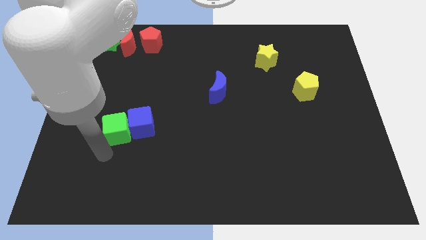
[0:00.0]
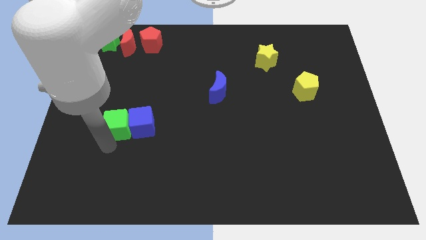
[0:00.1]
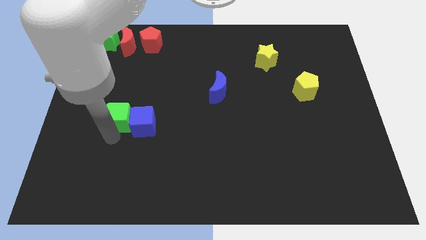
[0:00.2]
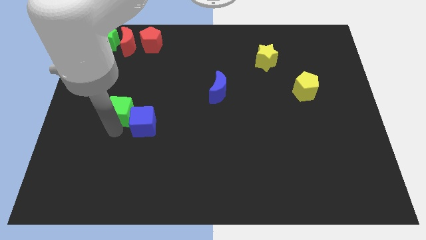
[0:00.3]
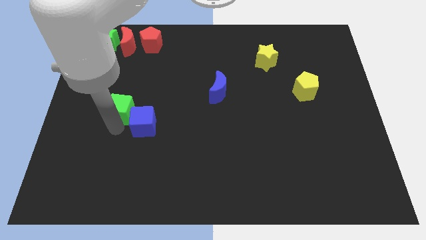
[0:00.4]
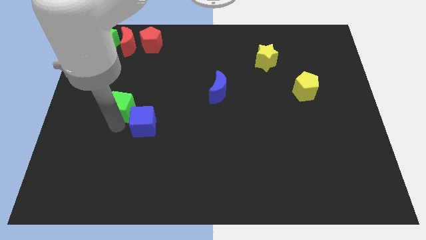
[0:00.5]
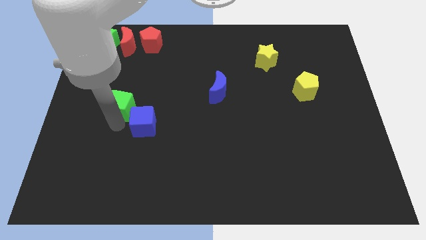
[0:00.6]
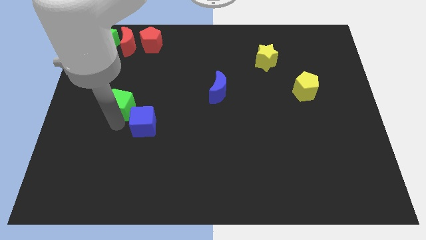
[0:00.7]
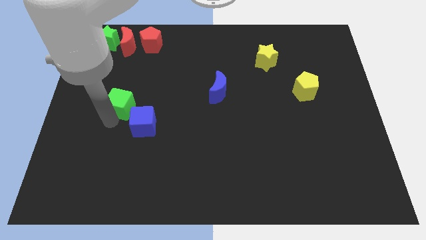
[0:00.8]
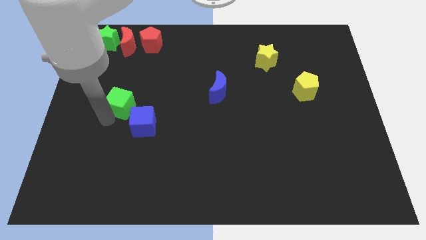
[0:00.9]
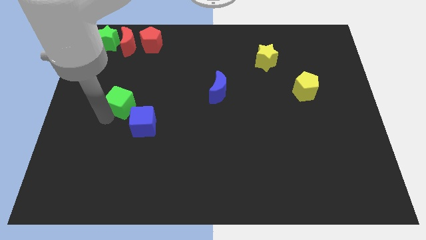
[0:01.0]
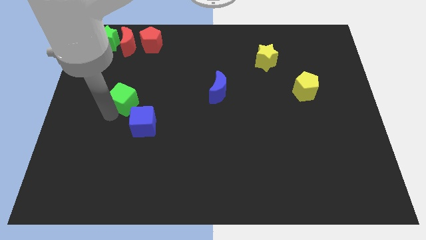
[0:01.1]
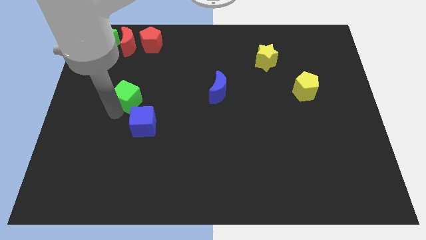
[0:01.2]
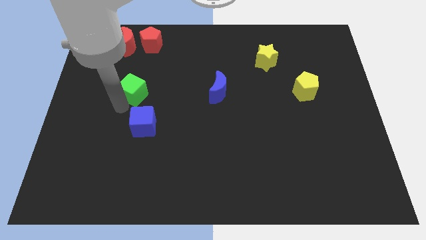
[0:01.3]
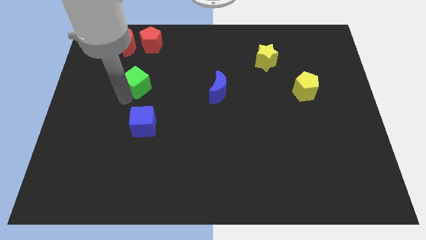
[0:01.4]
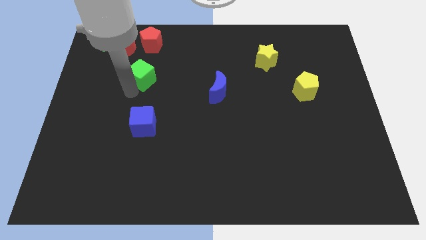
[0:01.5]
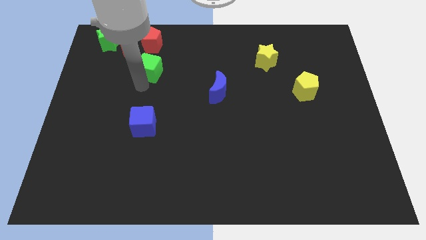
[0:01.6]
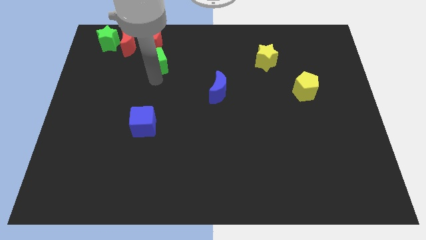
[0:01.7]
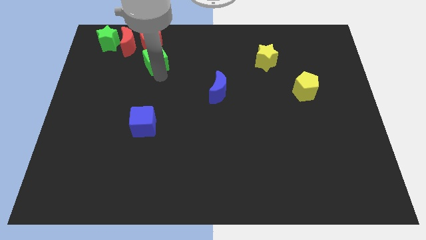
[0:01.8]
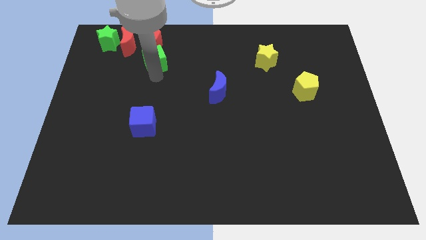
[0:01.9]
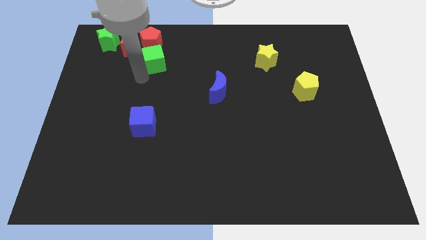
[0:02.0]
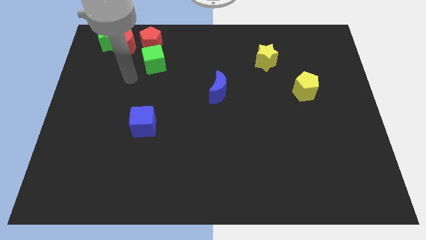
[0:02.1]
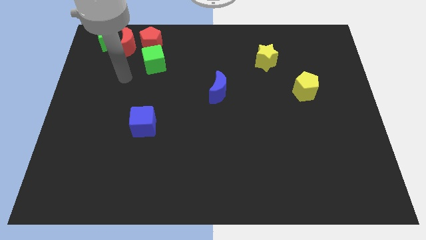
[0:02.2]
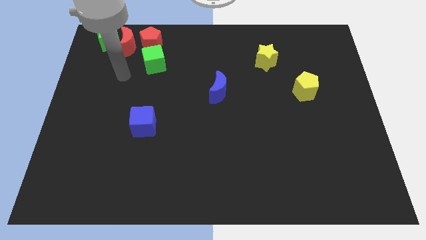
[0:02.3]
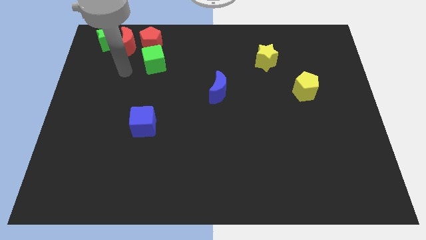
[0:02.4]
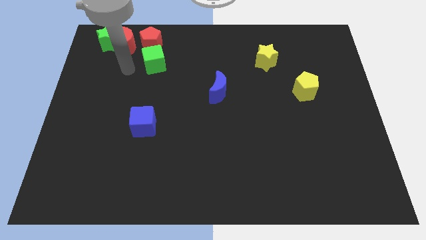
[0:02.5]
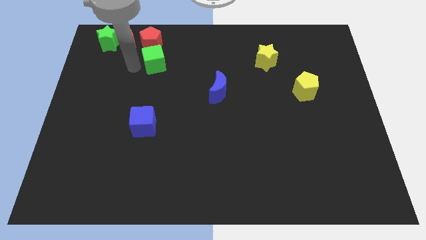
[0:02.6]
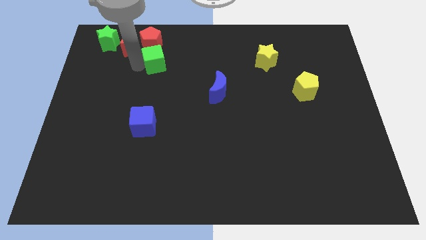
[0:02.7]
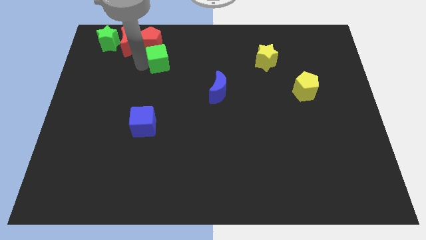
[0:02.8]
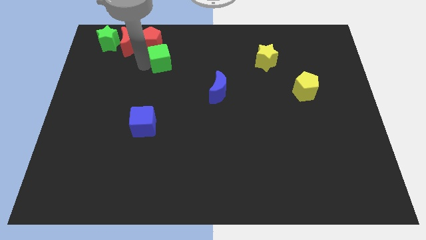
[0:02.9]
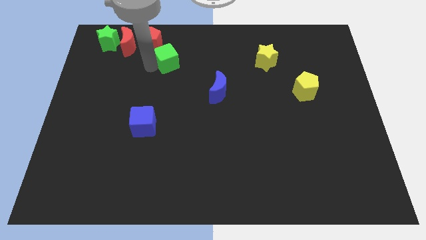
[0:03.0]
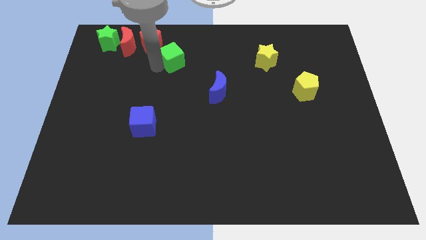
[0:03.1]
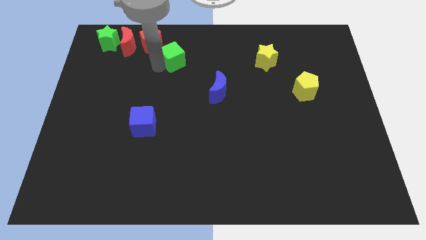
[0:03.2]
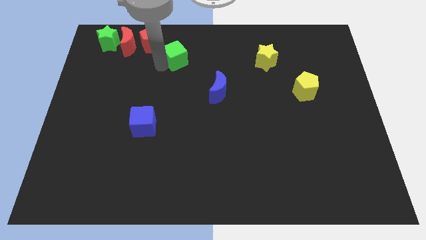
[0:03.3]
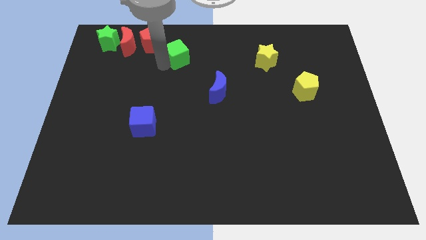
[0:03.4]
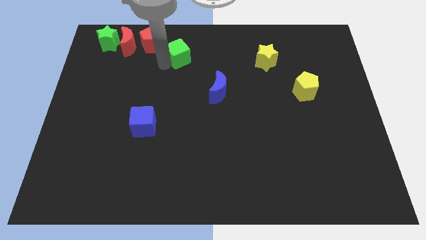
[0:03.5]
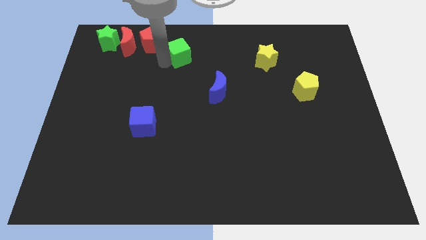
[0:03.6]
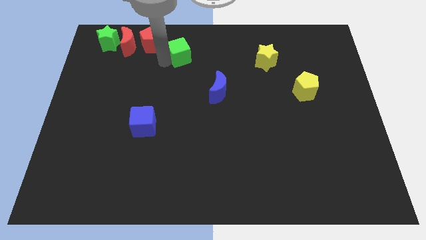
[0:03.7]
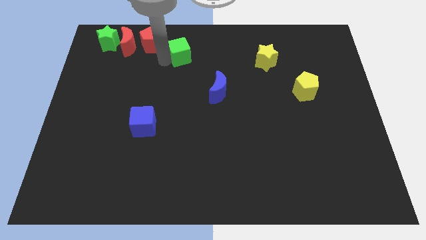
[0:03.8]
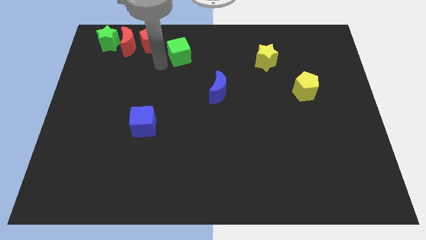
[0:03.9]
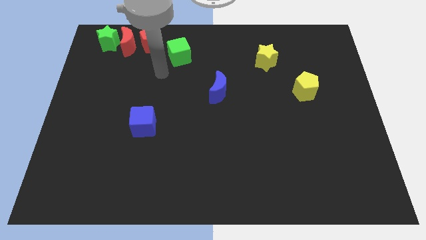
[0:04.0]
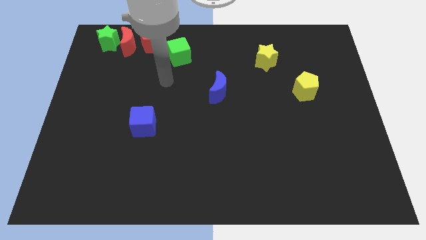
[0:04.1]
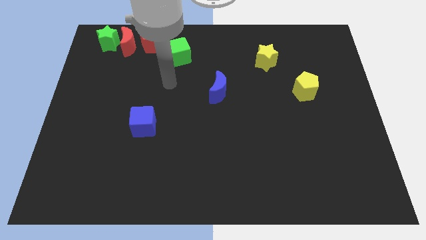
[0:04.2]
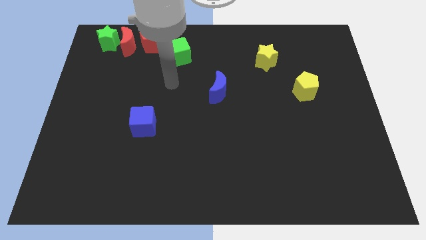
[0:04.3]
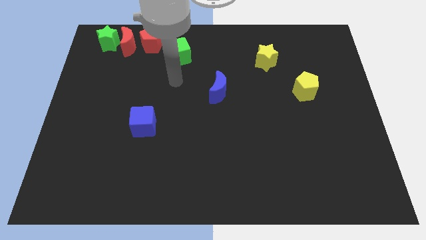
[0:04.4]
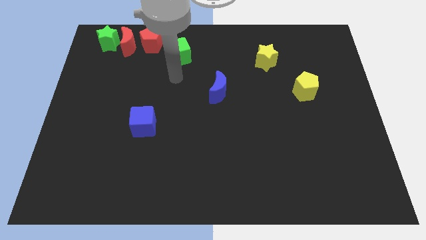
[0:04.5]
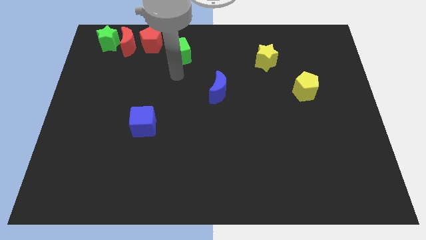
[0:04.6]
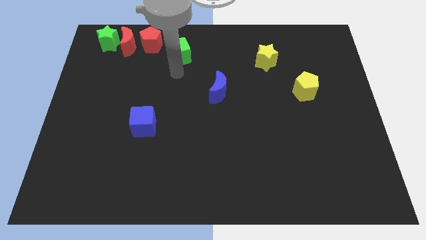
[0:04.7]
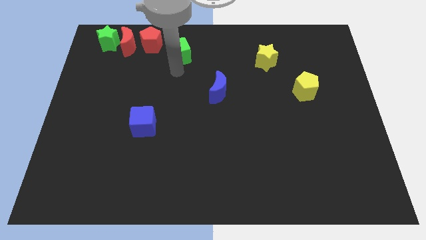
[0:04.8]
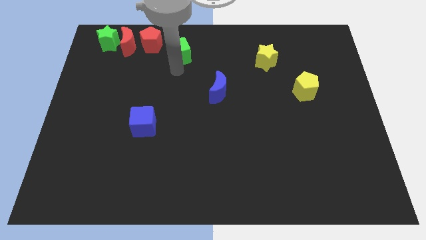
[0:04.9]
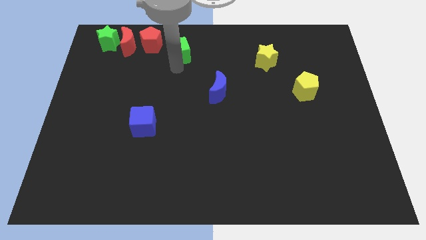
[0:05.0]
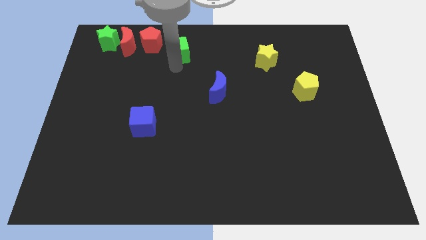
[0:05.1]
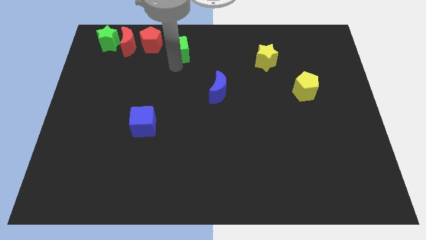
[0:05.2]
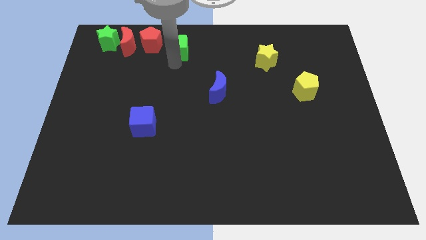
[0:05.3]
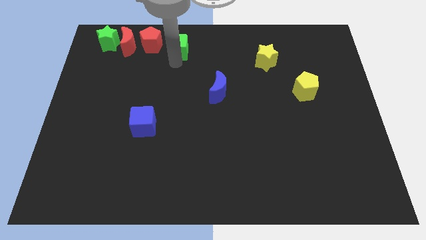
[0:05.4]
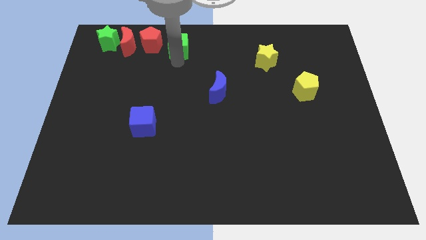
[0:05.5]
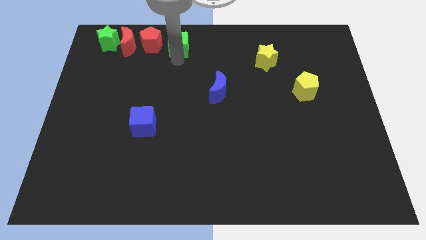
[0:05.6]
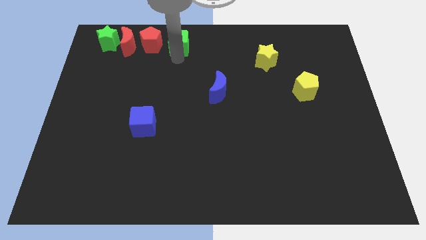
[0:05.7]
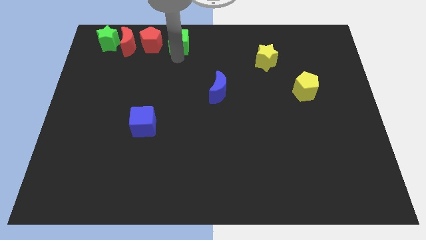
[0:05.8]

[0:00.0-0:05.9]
place green cube right to red pentagon

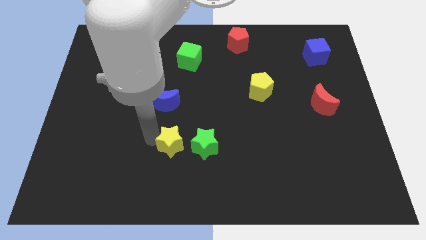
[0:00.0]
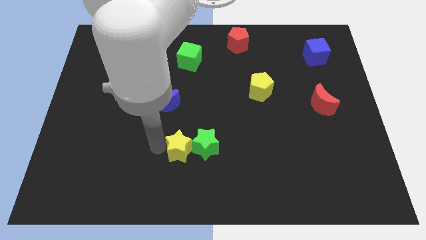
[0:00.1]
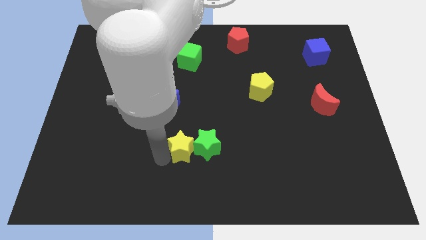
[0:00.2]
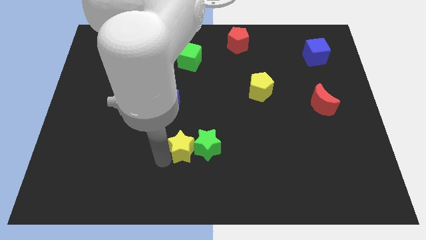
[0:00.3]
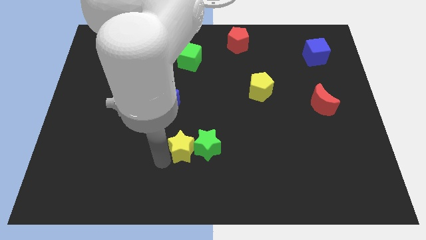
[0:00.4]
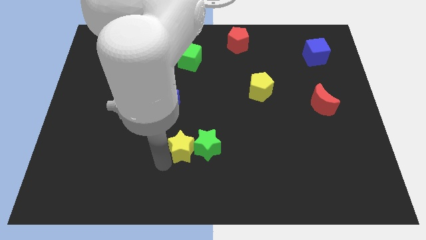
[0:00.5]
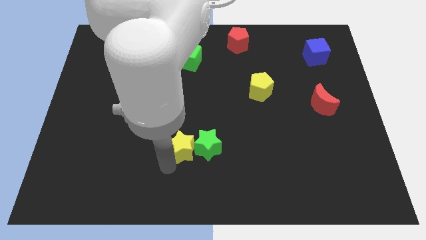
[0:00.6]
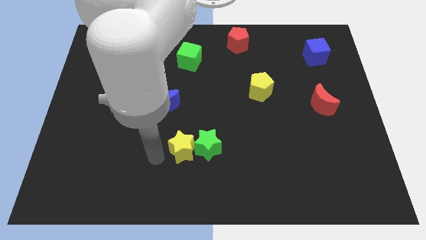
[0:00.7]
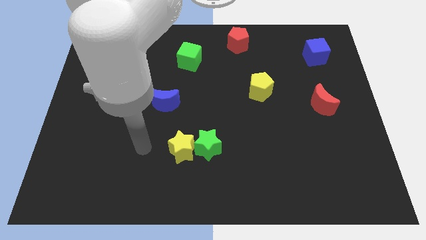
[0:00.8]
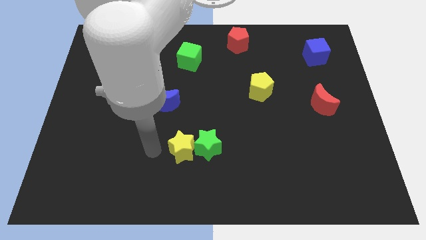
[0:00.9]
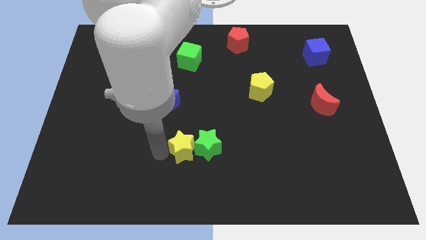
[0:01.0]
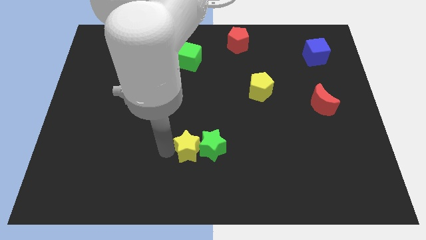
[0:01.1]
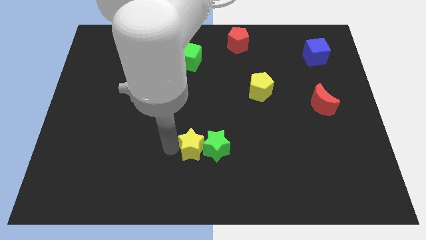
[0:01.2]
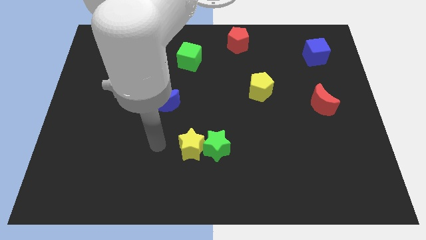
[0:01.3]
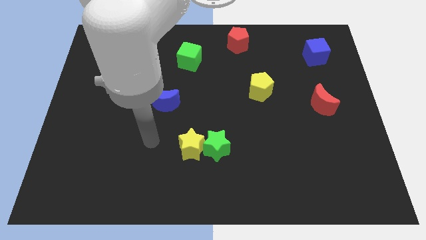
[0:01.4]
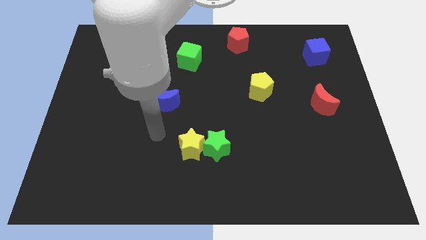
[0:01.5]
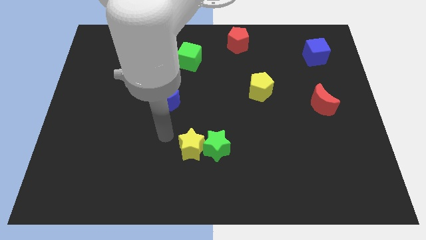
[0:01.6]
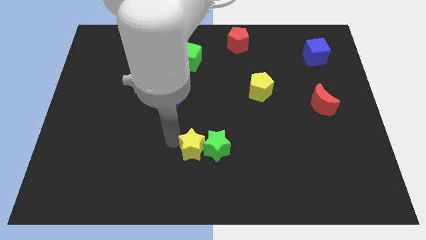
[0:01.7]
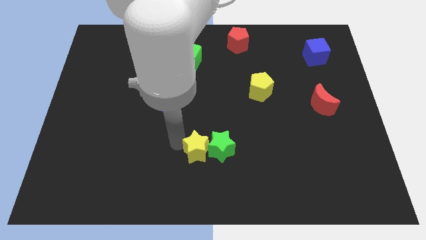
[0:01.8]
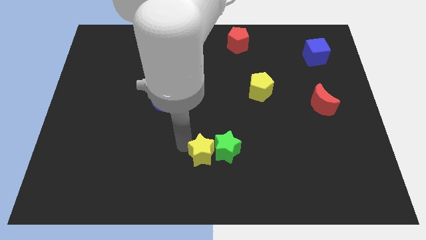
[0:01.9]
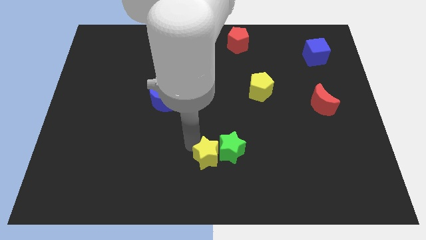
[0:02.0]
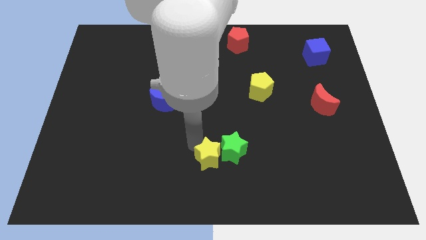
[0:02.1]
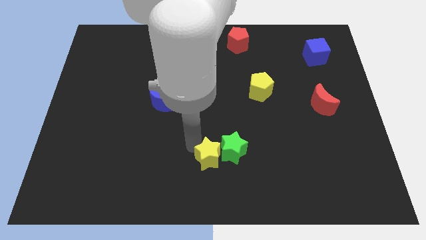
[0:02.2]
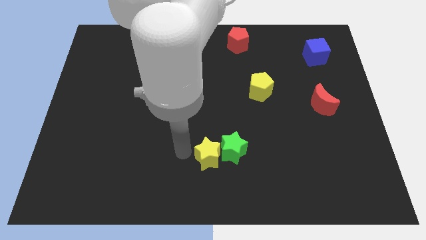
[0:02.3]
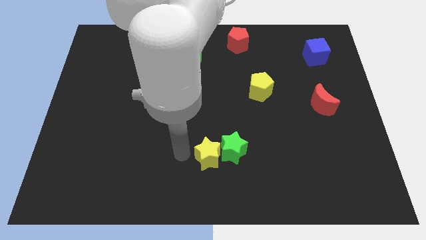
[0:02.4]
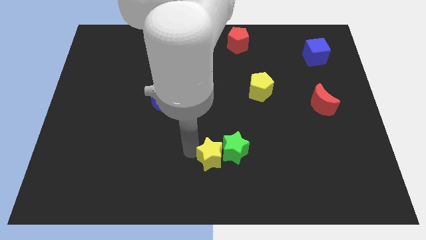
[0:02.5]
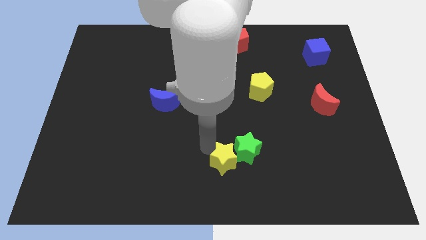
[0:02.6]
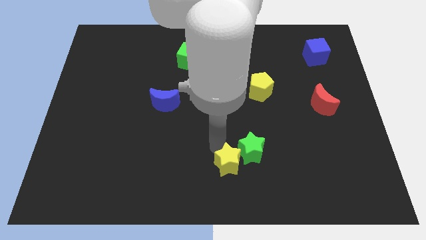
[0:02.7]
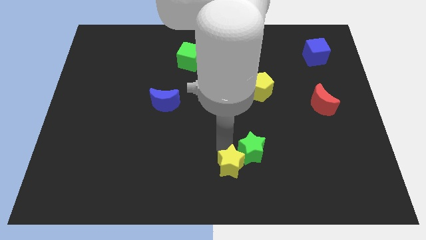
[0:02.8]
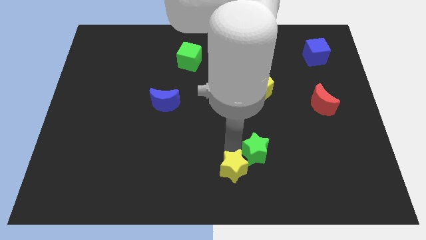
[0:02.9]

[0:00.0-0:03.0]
move the yellow star along with the green star towards the bottom right
